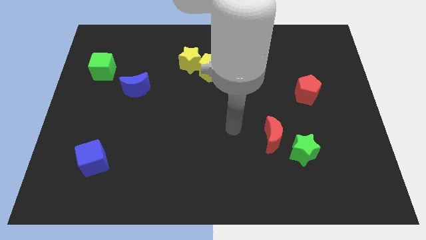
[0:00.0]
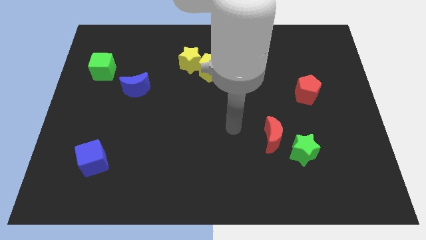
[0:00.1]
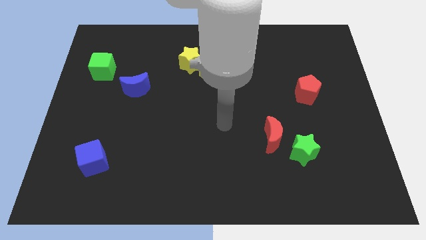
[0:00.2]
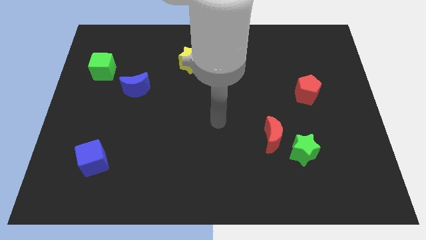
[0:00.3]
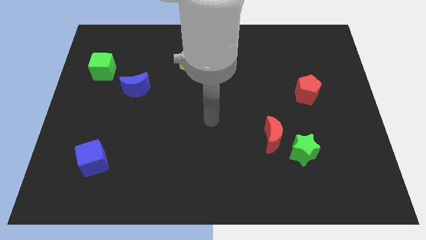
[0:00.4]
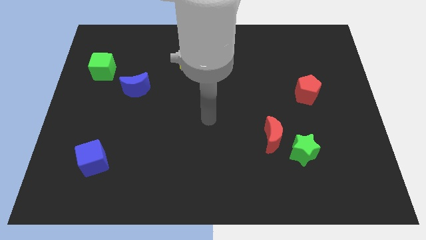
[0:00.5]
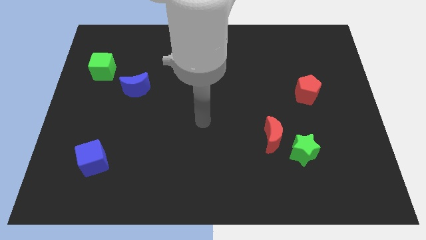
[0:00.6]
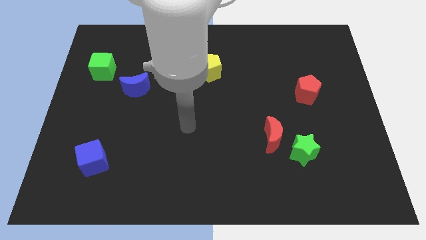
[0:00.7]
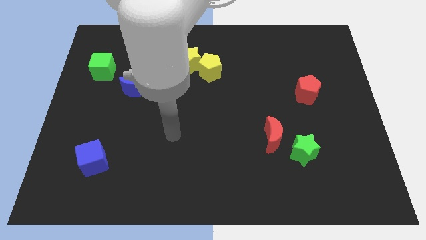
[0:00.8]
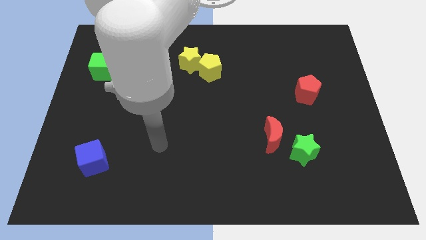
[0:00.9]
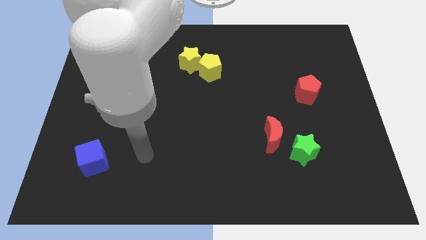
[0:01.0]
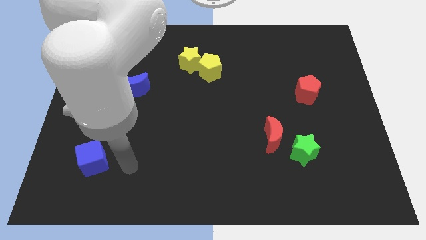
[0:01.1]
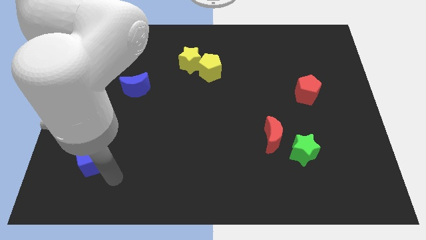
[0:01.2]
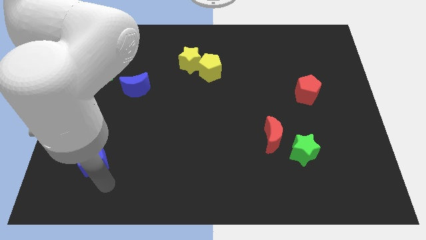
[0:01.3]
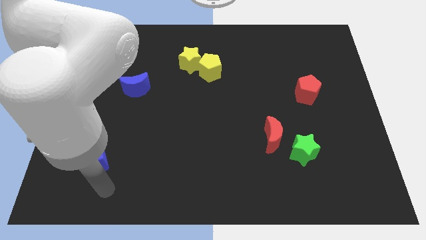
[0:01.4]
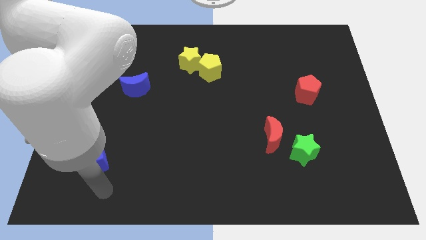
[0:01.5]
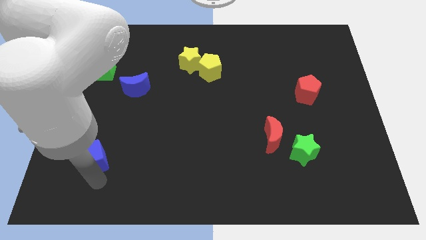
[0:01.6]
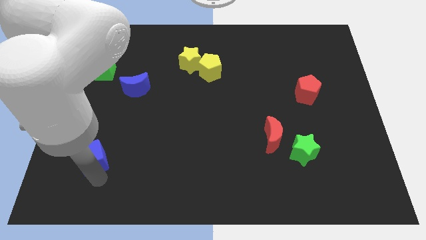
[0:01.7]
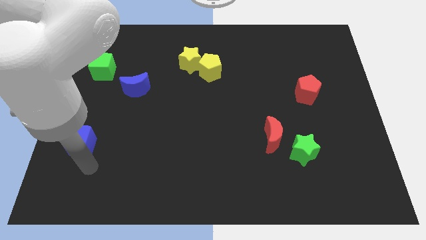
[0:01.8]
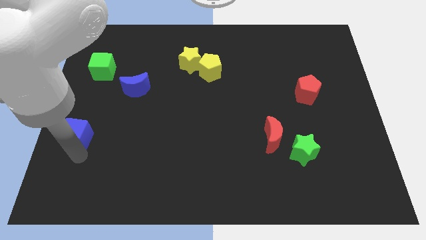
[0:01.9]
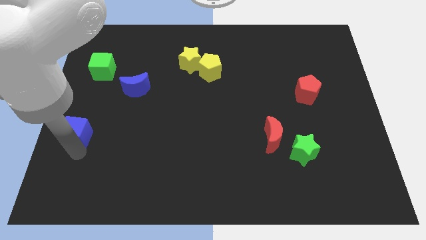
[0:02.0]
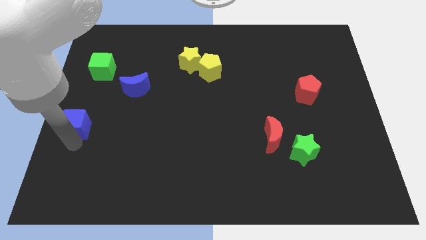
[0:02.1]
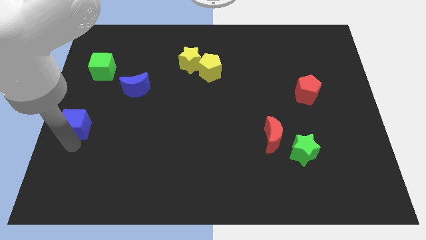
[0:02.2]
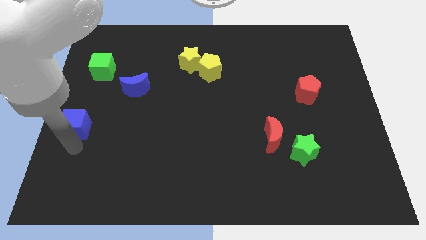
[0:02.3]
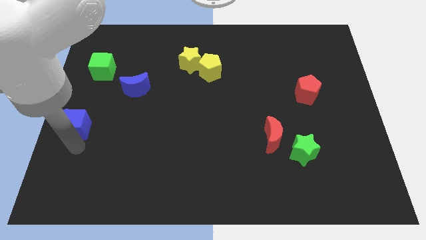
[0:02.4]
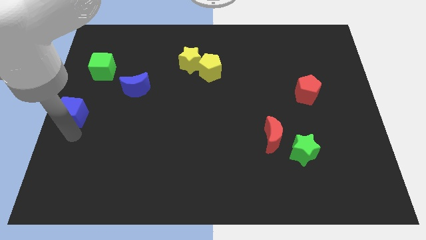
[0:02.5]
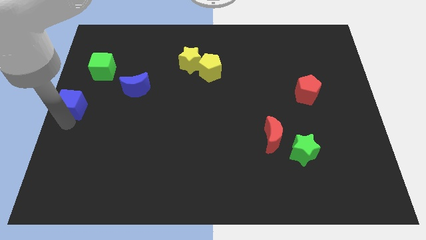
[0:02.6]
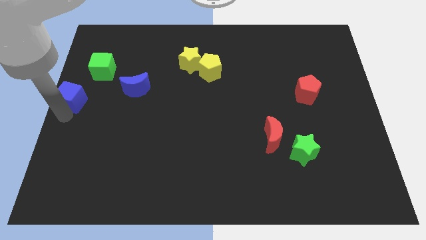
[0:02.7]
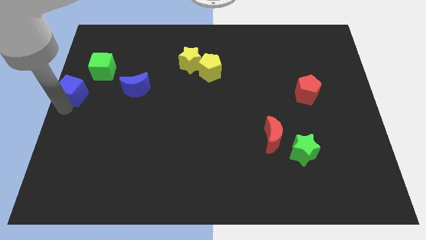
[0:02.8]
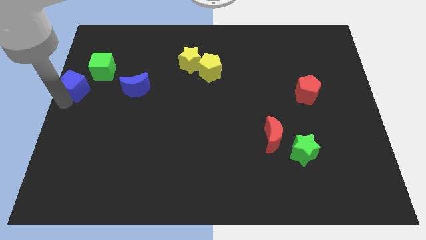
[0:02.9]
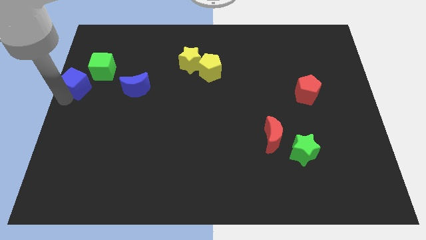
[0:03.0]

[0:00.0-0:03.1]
move the blue cube towards the green cube

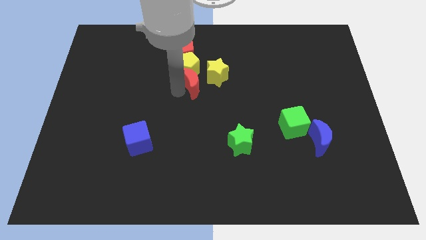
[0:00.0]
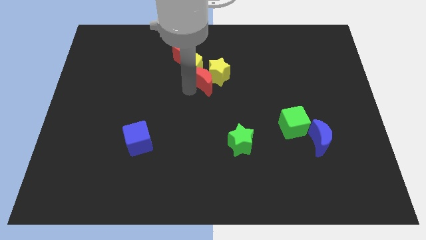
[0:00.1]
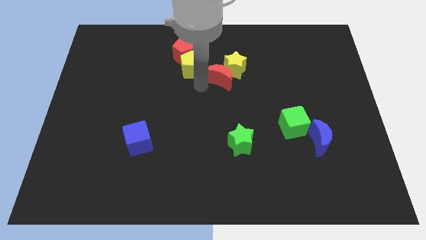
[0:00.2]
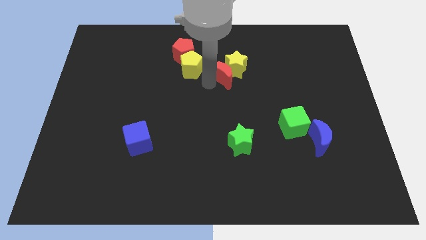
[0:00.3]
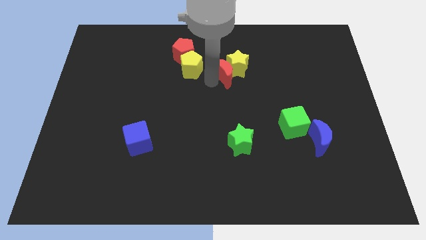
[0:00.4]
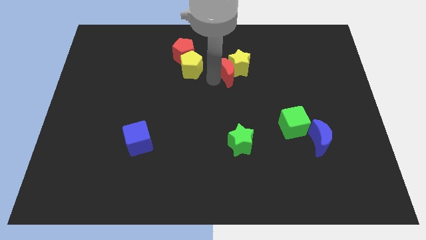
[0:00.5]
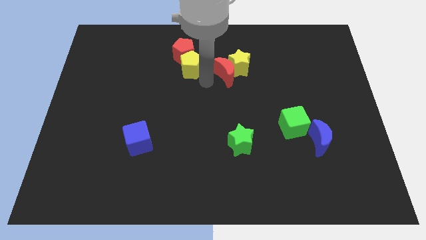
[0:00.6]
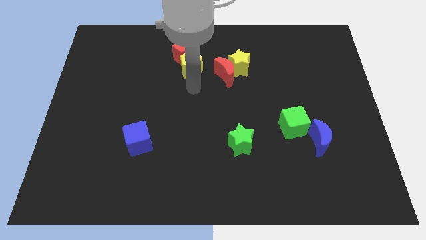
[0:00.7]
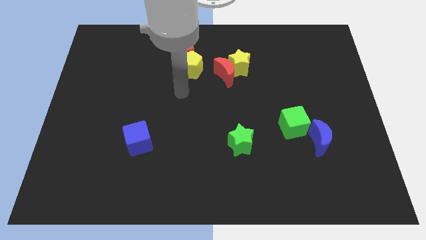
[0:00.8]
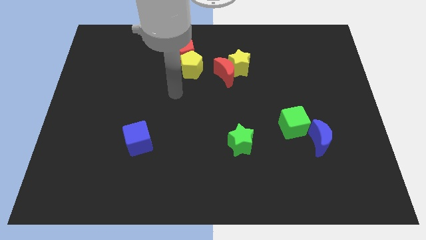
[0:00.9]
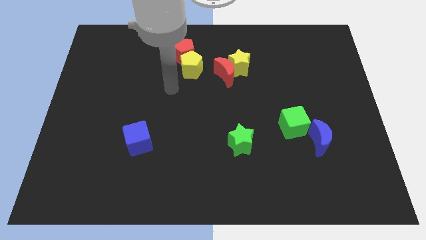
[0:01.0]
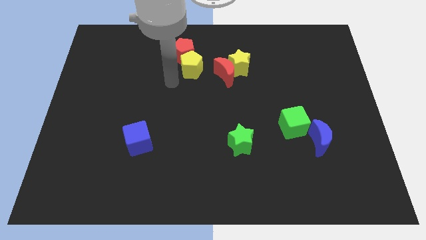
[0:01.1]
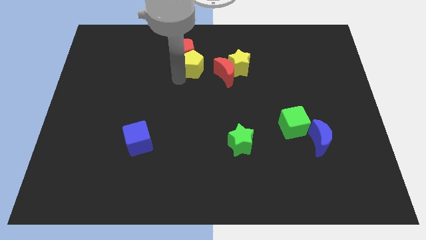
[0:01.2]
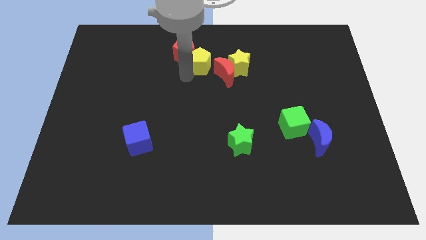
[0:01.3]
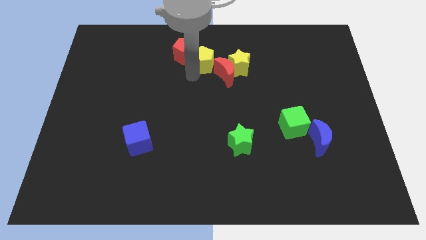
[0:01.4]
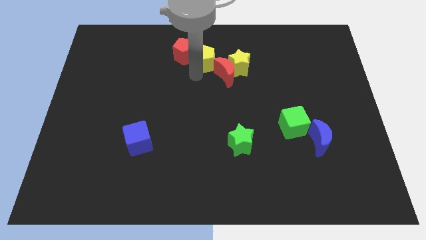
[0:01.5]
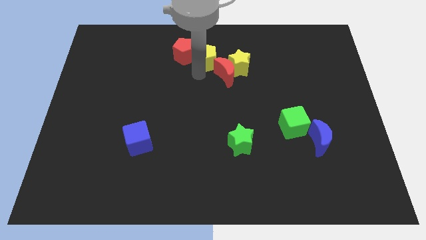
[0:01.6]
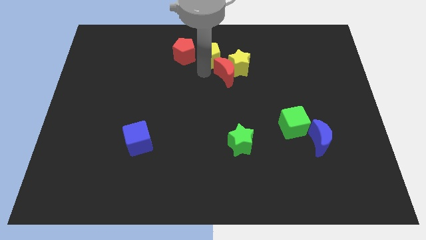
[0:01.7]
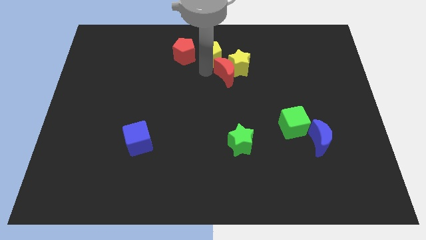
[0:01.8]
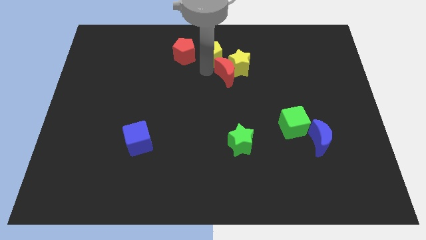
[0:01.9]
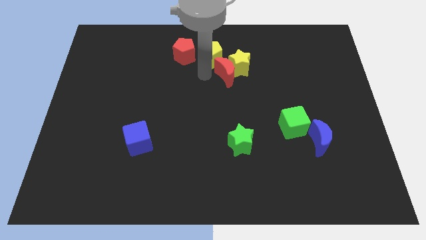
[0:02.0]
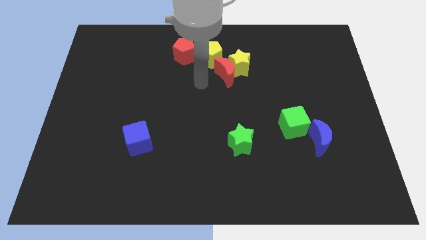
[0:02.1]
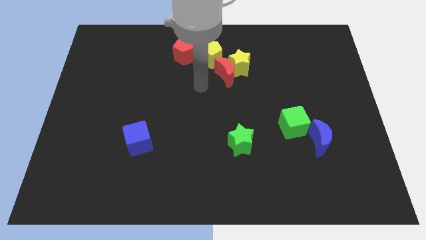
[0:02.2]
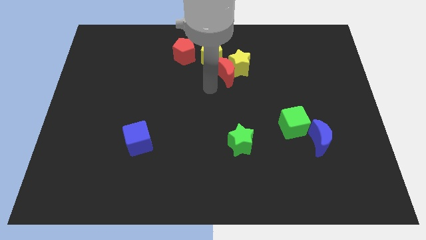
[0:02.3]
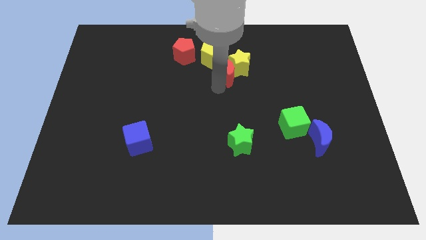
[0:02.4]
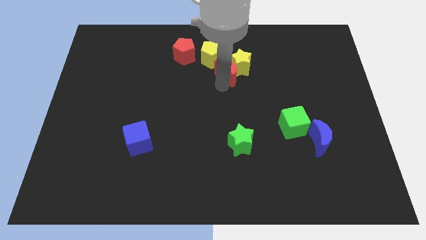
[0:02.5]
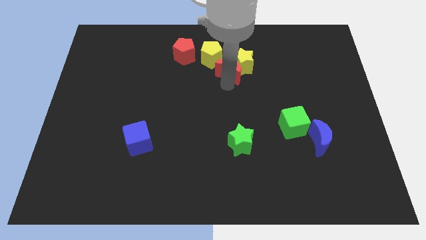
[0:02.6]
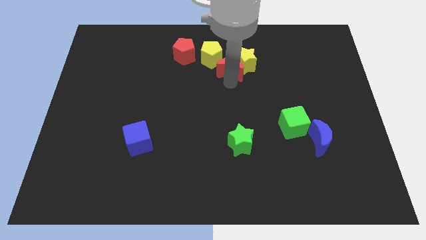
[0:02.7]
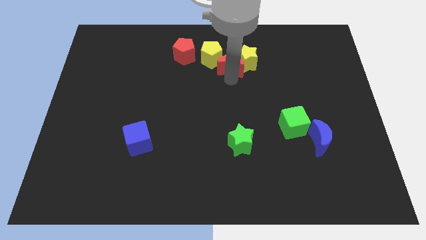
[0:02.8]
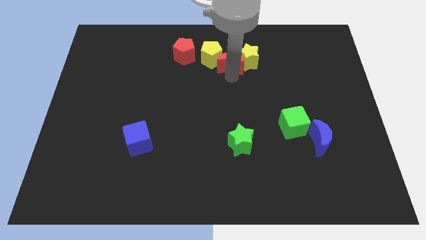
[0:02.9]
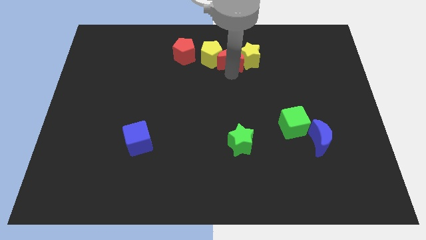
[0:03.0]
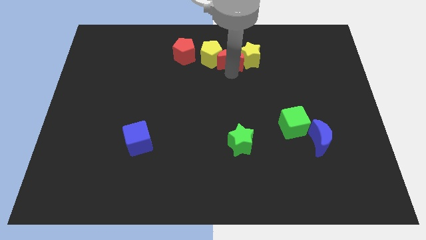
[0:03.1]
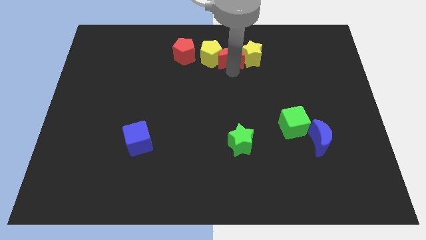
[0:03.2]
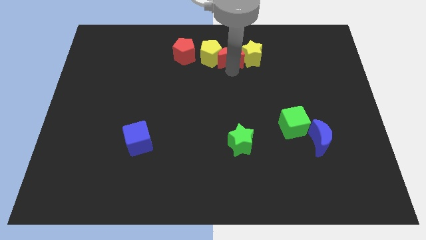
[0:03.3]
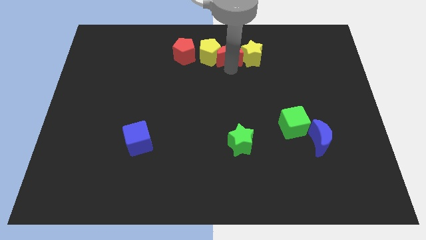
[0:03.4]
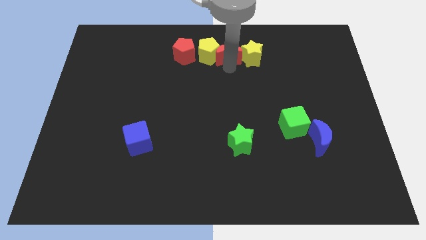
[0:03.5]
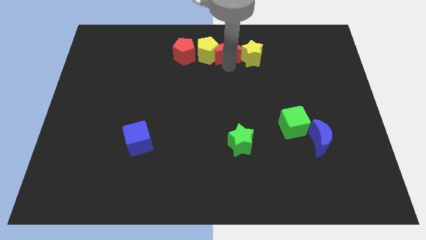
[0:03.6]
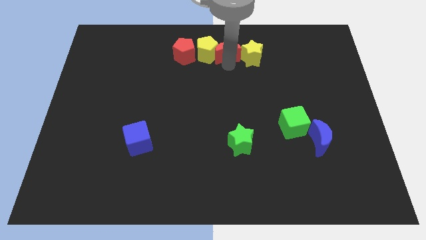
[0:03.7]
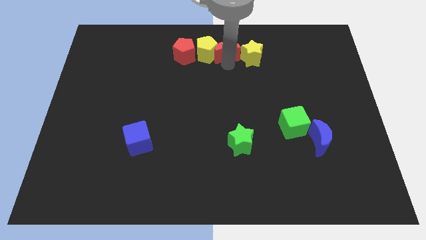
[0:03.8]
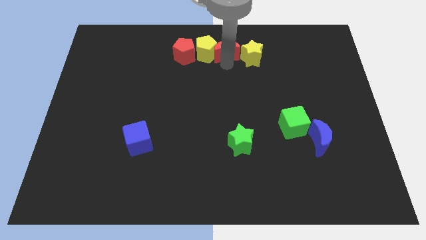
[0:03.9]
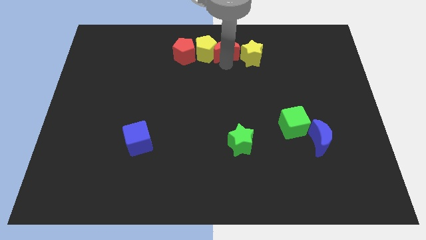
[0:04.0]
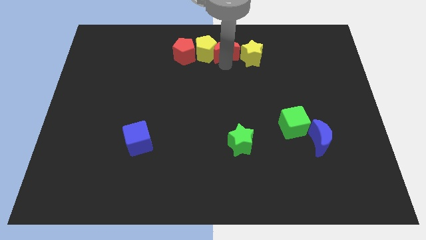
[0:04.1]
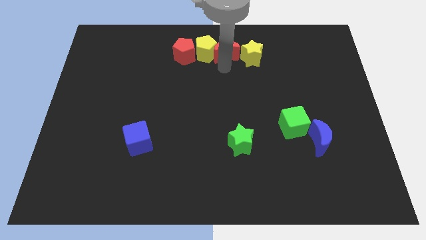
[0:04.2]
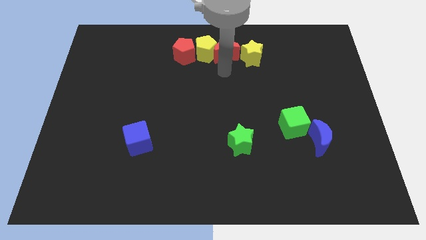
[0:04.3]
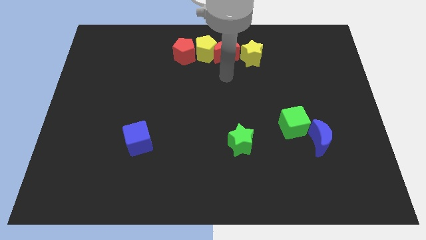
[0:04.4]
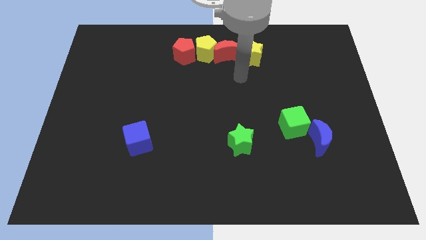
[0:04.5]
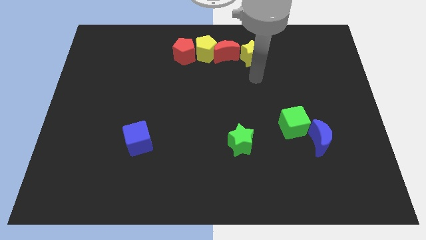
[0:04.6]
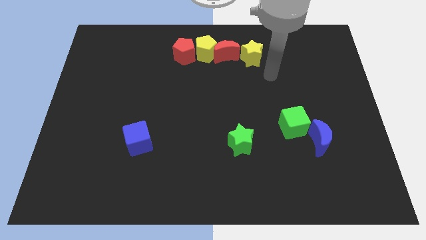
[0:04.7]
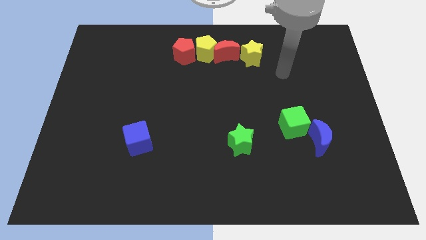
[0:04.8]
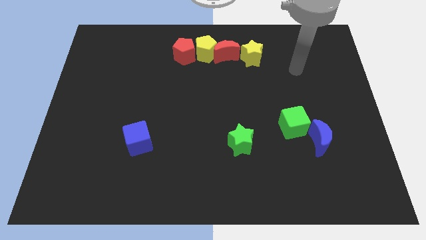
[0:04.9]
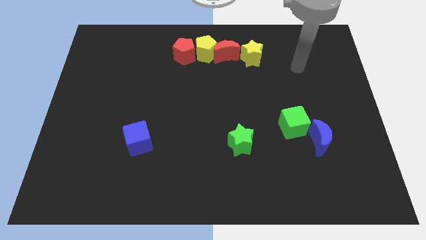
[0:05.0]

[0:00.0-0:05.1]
arrange the red and yellow blocks in a horizontal line

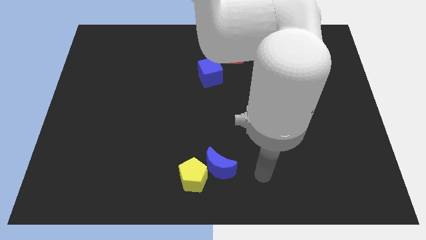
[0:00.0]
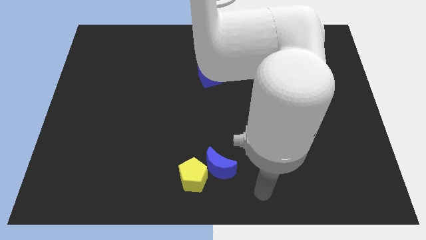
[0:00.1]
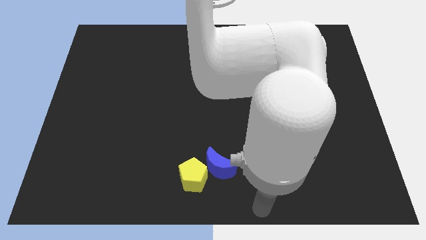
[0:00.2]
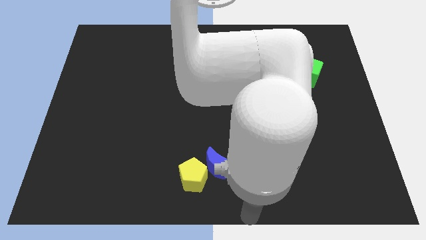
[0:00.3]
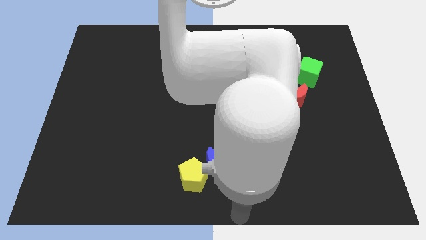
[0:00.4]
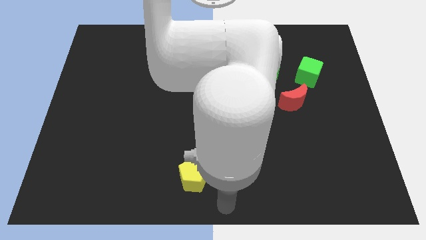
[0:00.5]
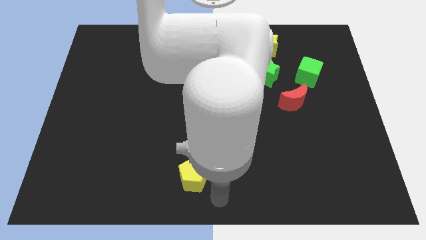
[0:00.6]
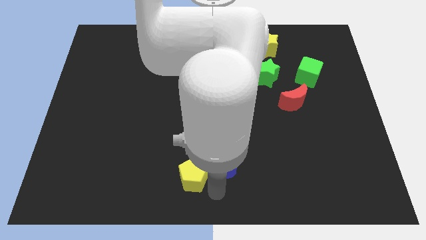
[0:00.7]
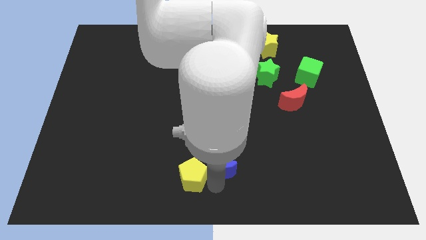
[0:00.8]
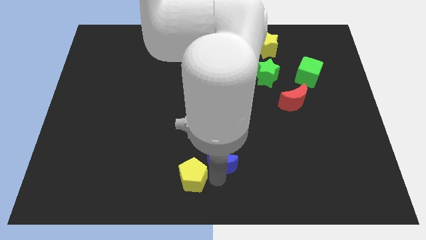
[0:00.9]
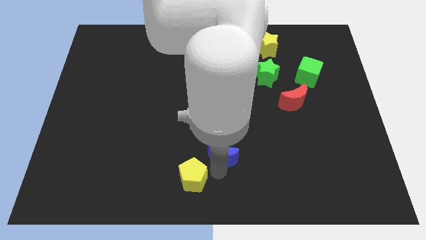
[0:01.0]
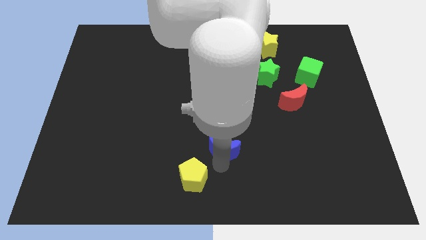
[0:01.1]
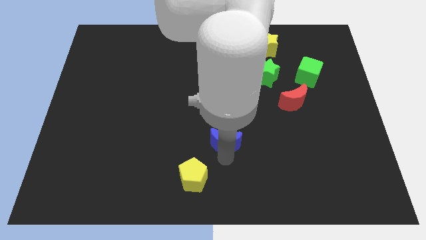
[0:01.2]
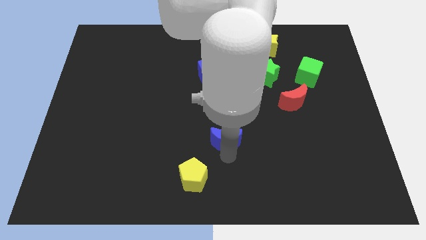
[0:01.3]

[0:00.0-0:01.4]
separate the blue crescent from the yellow pentagon
